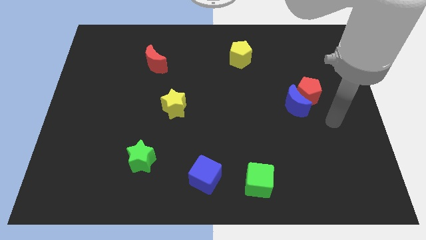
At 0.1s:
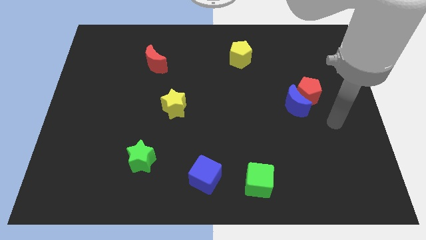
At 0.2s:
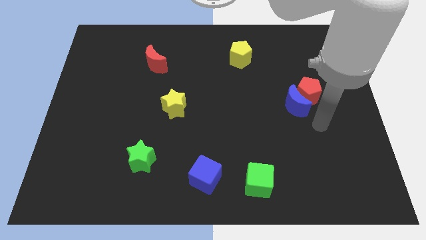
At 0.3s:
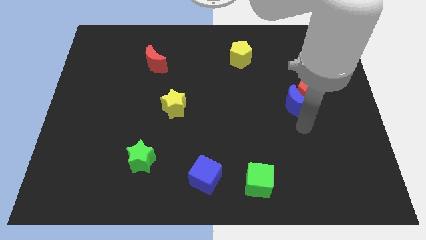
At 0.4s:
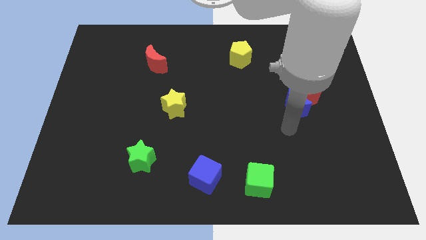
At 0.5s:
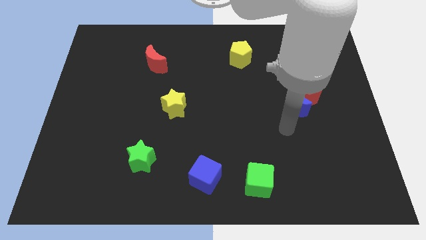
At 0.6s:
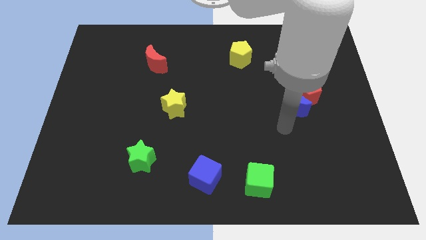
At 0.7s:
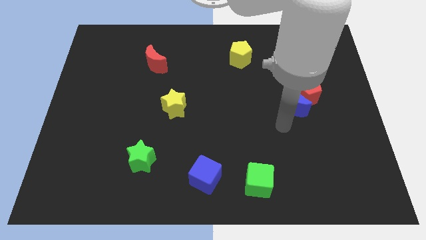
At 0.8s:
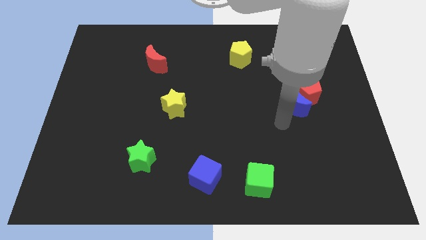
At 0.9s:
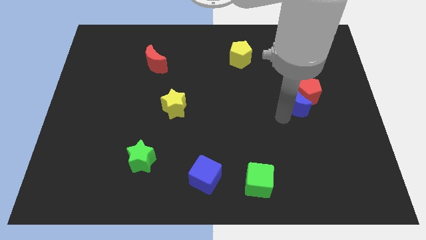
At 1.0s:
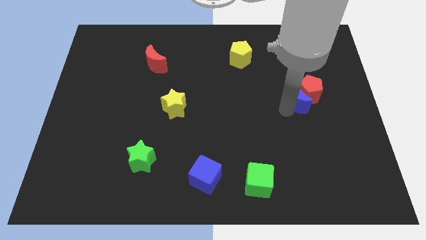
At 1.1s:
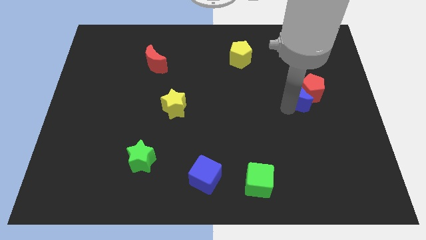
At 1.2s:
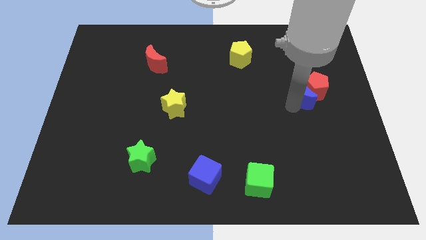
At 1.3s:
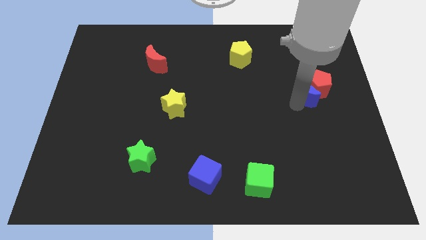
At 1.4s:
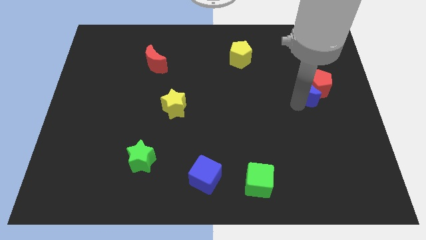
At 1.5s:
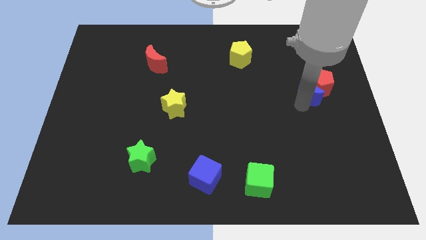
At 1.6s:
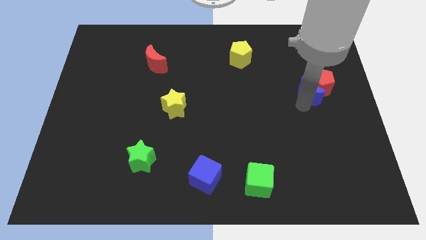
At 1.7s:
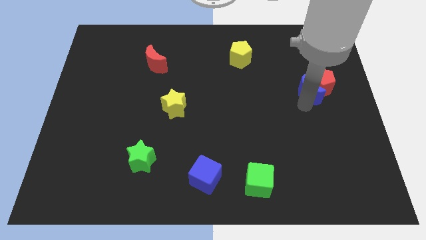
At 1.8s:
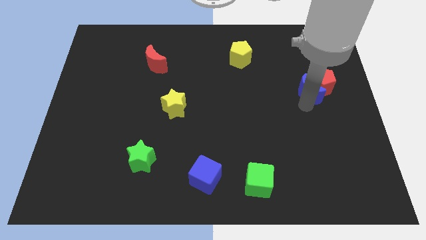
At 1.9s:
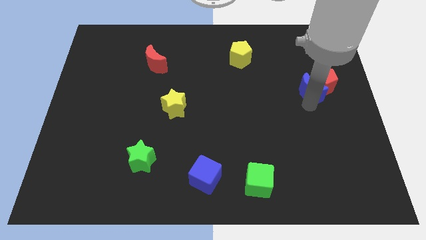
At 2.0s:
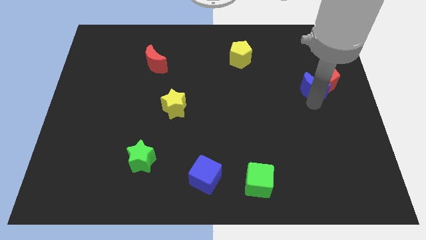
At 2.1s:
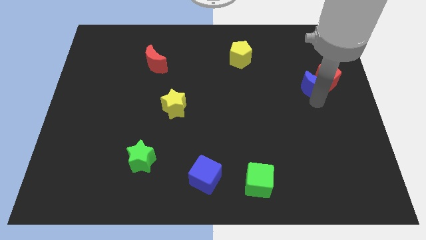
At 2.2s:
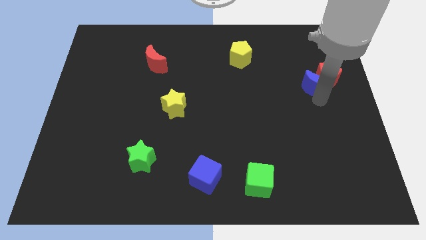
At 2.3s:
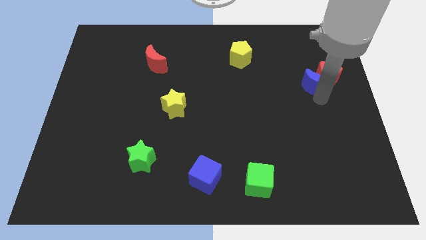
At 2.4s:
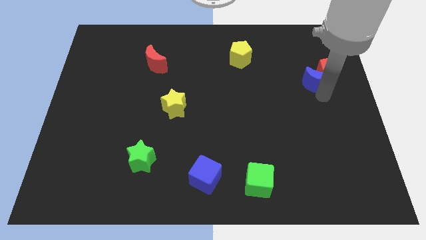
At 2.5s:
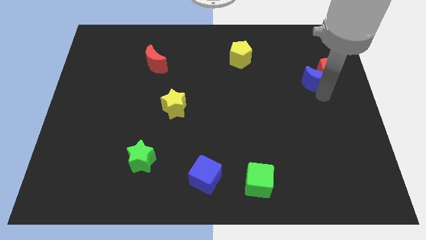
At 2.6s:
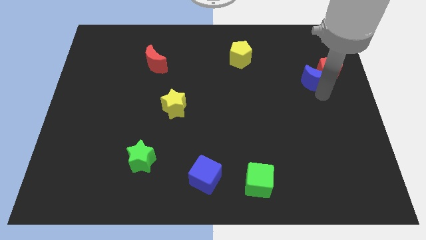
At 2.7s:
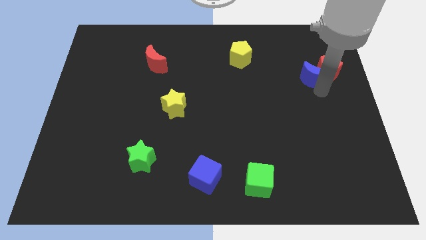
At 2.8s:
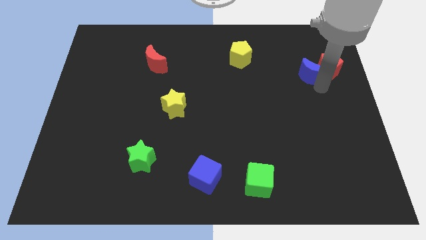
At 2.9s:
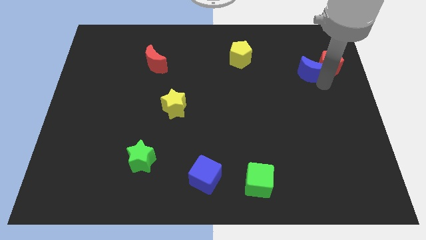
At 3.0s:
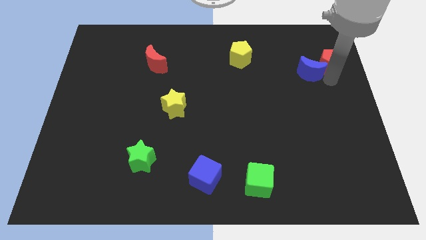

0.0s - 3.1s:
push blue moon along with red pentagon to the right of yellow pentagon

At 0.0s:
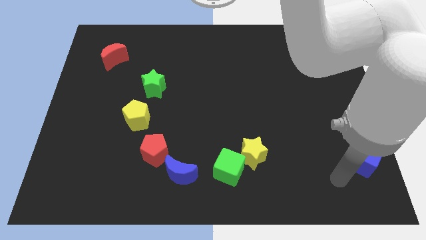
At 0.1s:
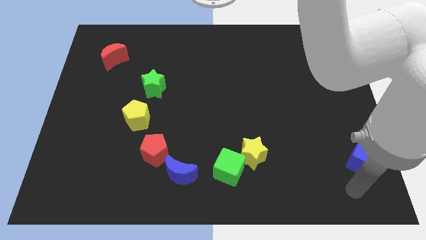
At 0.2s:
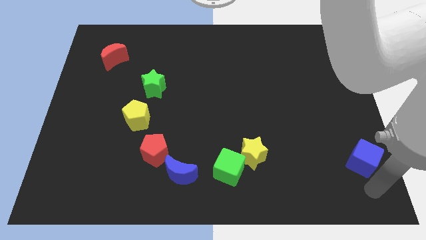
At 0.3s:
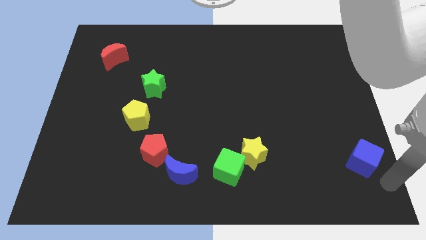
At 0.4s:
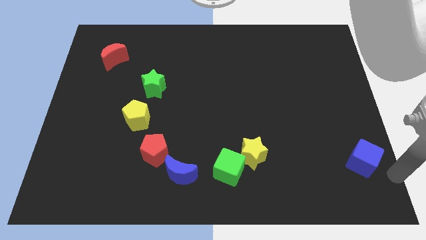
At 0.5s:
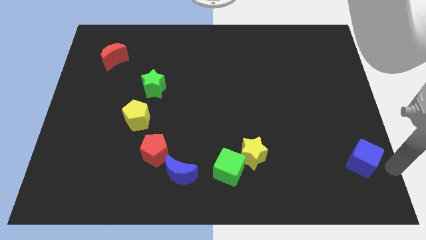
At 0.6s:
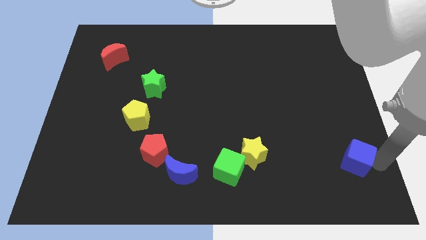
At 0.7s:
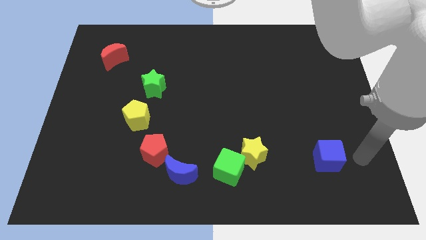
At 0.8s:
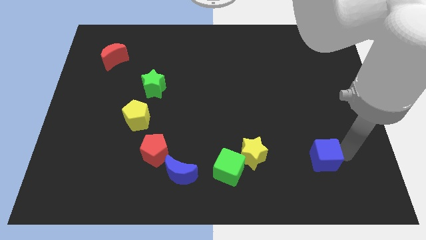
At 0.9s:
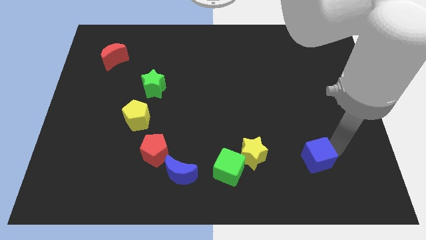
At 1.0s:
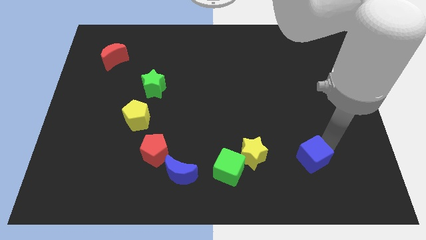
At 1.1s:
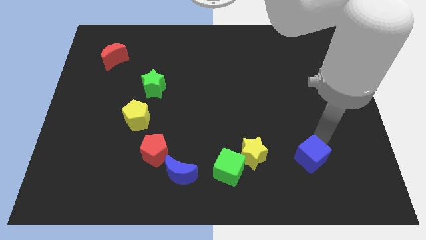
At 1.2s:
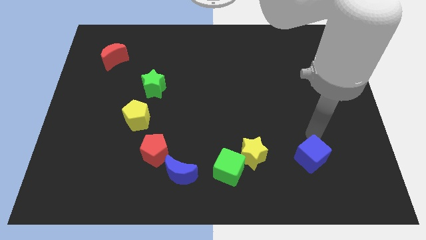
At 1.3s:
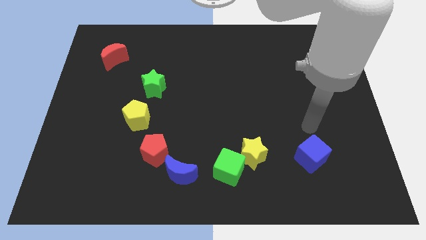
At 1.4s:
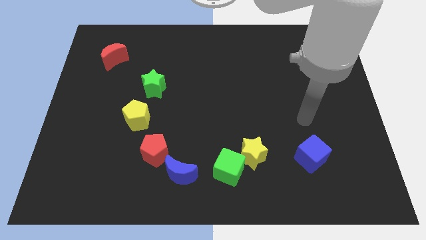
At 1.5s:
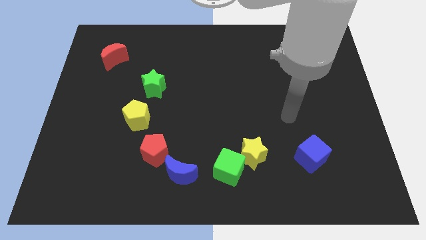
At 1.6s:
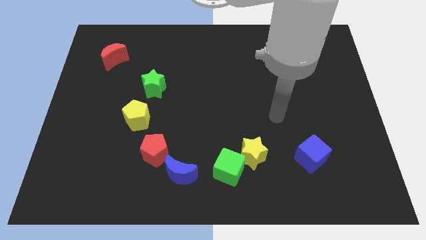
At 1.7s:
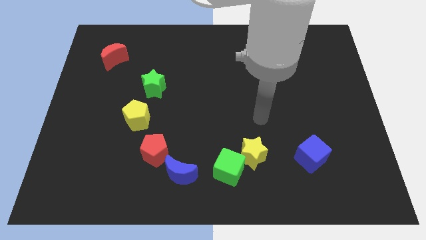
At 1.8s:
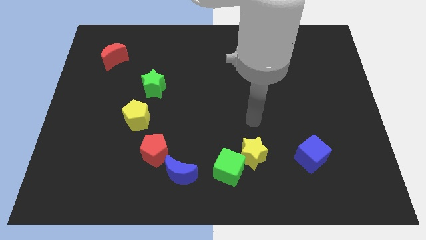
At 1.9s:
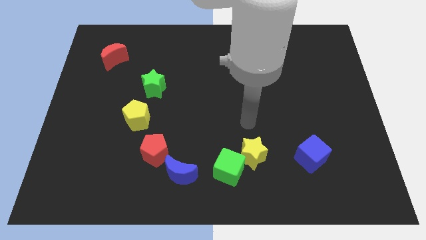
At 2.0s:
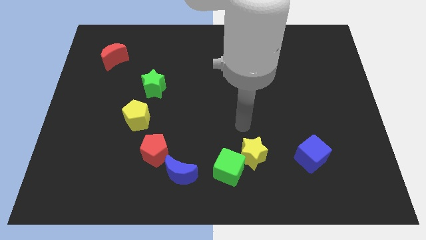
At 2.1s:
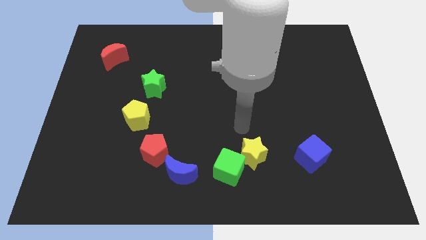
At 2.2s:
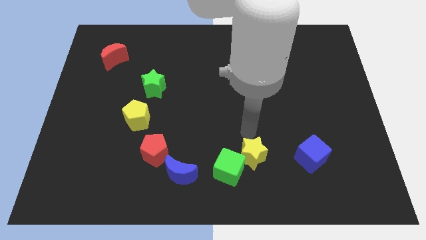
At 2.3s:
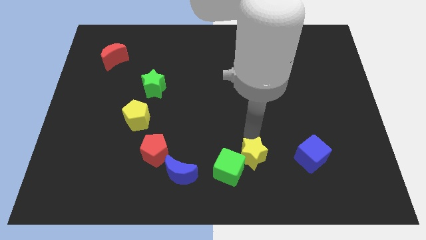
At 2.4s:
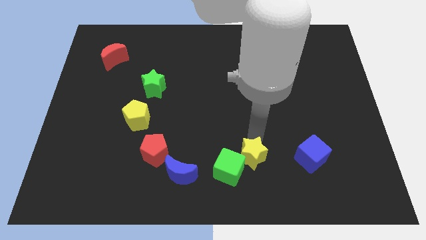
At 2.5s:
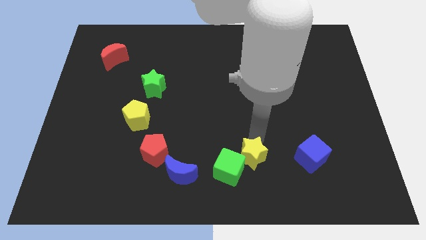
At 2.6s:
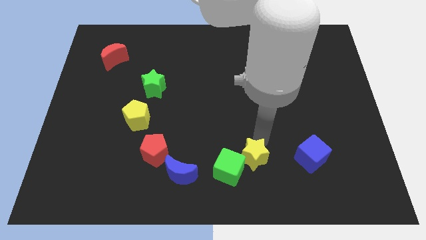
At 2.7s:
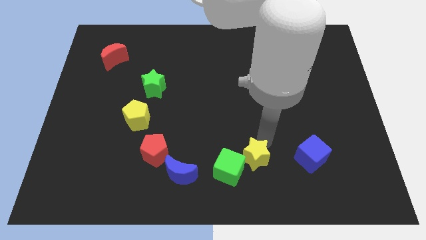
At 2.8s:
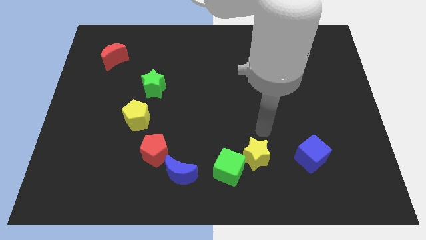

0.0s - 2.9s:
drag the blue cube to the left

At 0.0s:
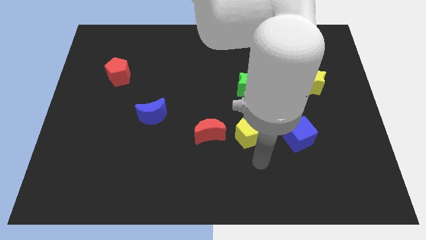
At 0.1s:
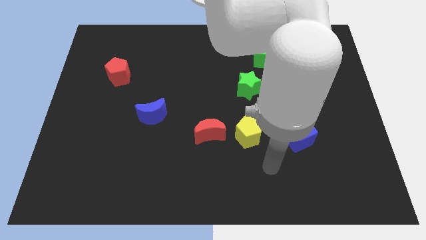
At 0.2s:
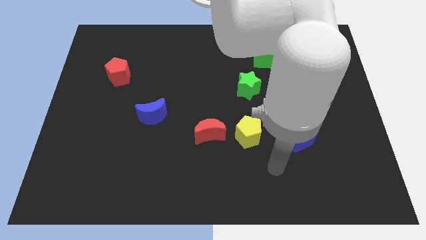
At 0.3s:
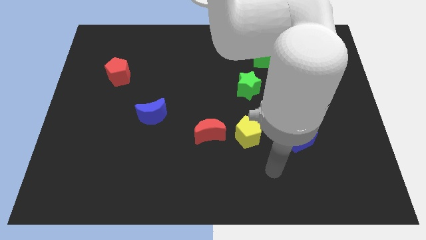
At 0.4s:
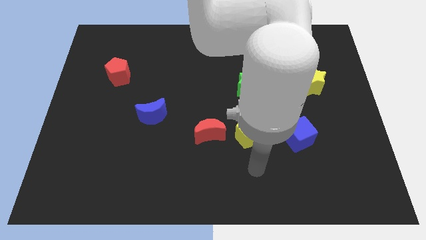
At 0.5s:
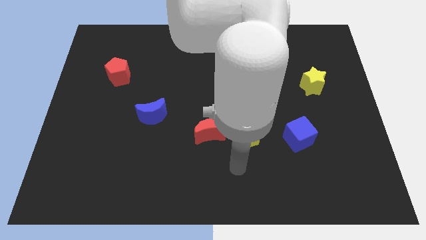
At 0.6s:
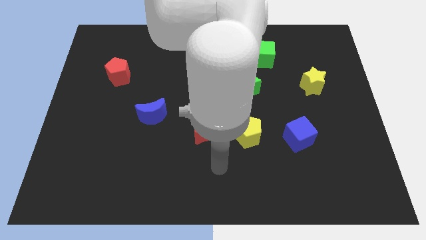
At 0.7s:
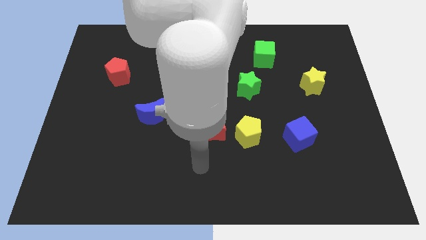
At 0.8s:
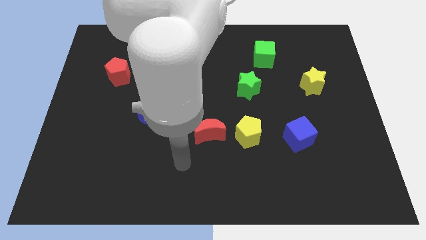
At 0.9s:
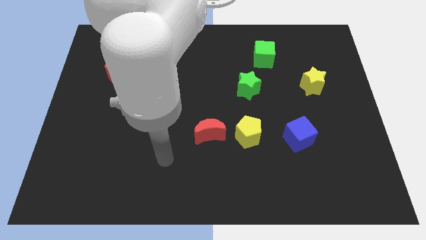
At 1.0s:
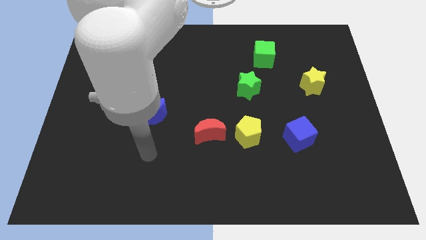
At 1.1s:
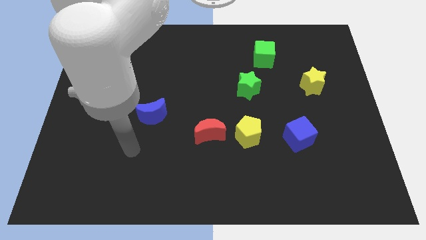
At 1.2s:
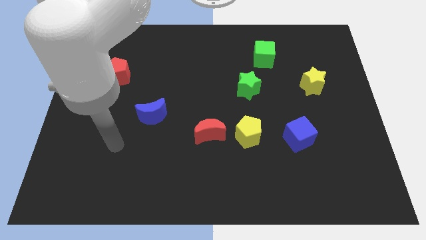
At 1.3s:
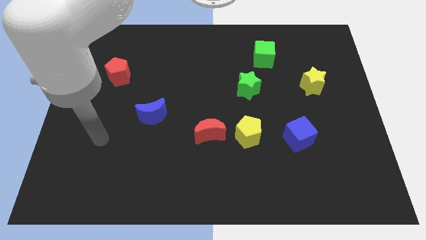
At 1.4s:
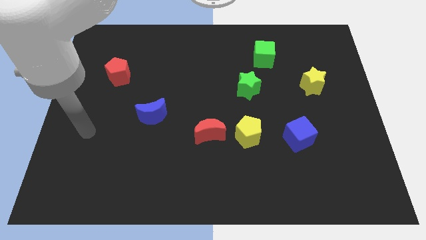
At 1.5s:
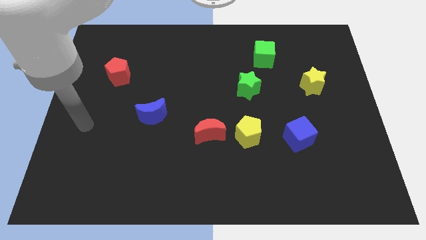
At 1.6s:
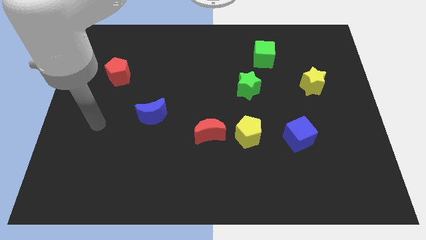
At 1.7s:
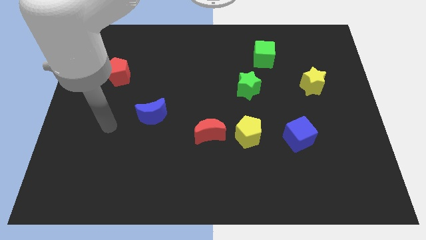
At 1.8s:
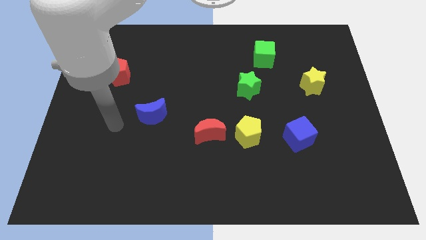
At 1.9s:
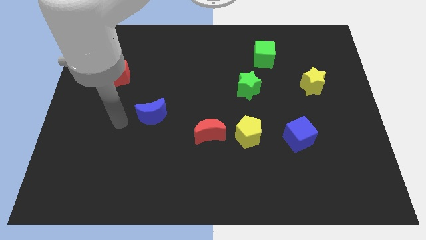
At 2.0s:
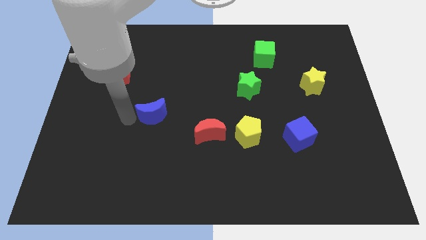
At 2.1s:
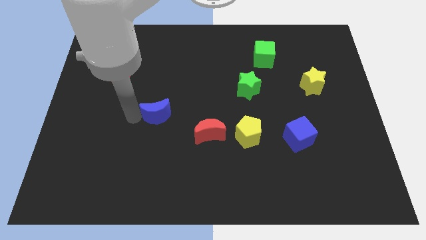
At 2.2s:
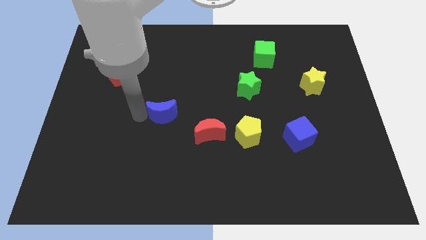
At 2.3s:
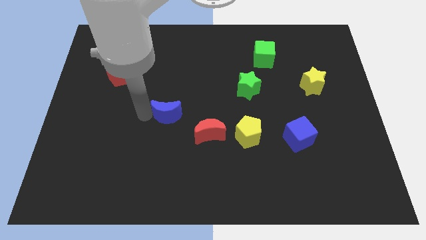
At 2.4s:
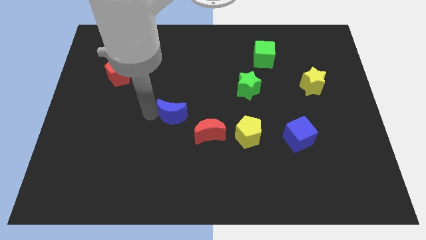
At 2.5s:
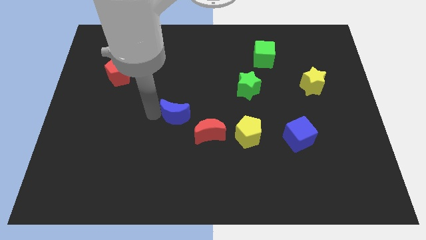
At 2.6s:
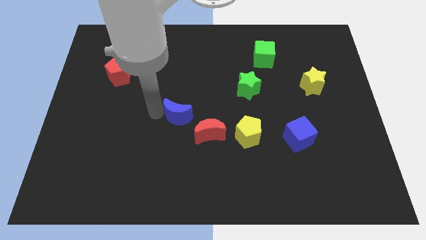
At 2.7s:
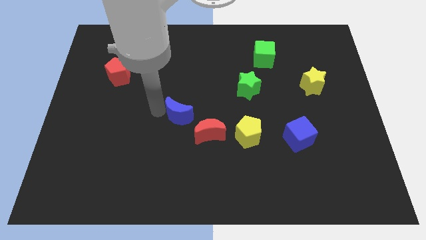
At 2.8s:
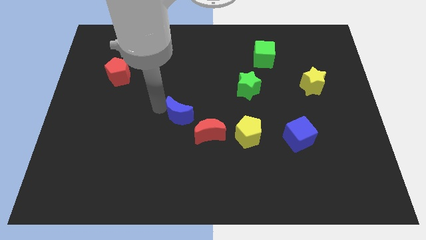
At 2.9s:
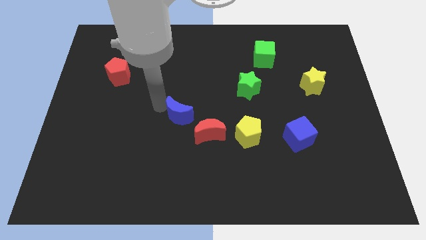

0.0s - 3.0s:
move the blue moon towards the red crescent
